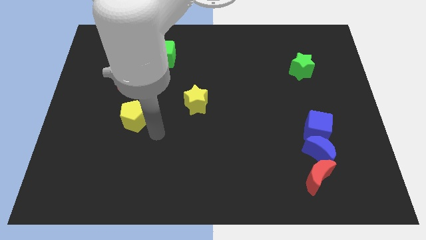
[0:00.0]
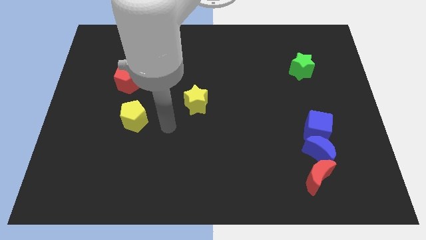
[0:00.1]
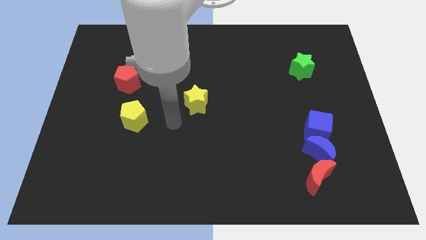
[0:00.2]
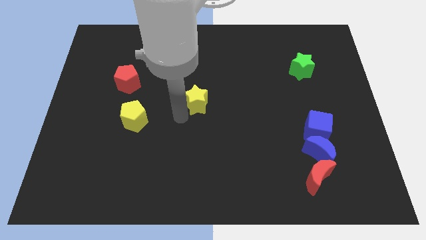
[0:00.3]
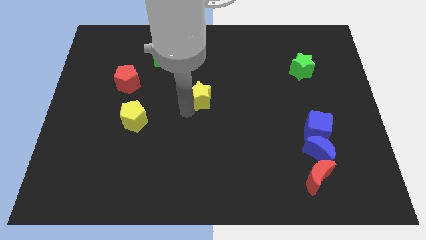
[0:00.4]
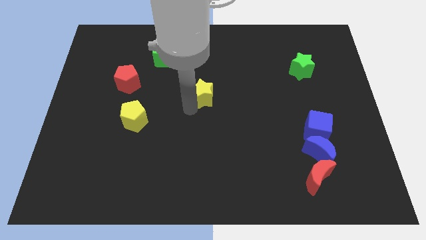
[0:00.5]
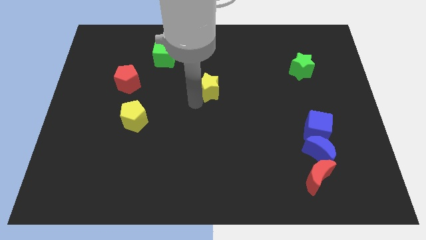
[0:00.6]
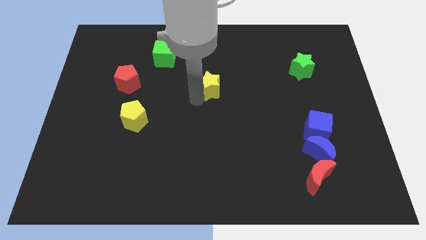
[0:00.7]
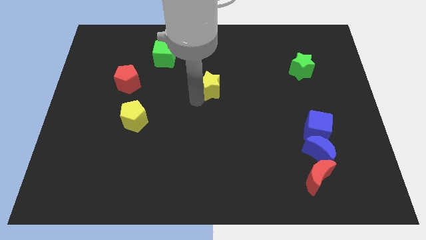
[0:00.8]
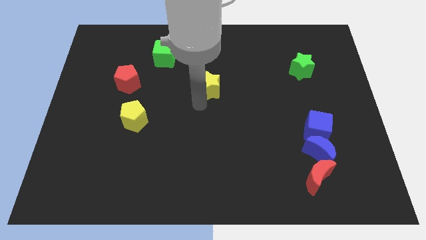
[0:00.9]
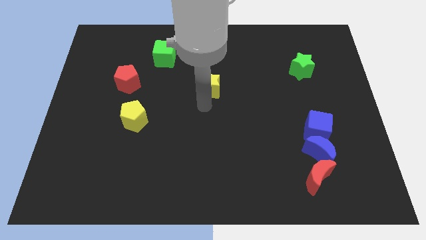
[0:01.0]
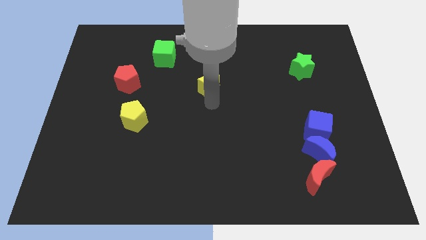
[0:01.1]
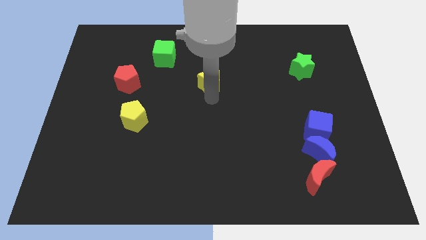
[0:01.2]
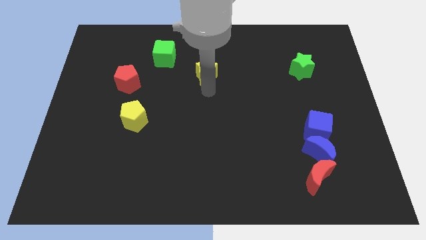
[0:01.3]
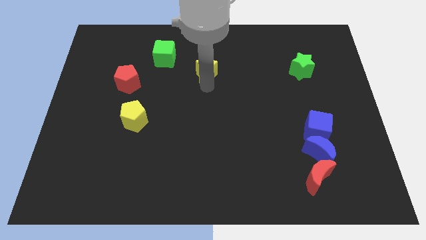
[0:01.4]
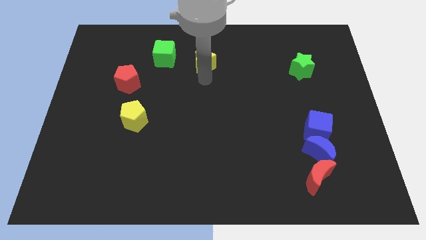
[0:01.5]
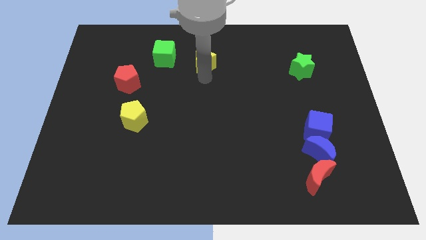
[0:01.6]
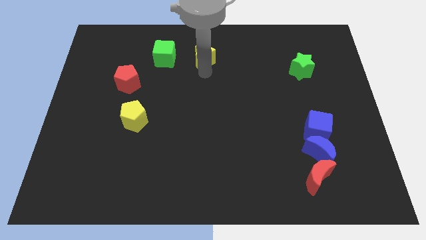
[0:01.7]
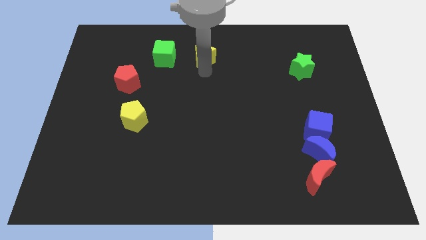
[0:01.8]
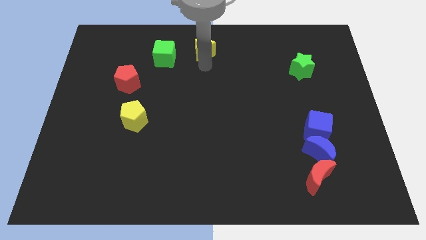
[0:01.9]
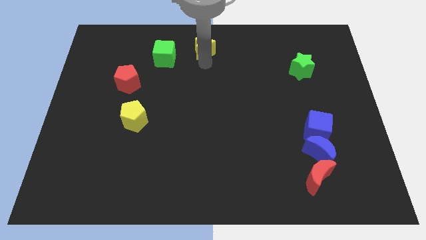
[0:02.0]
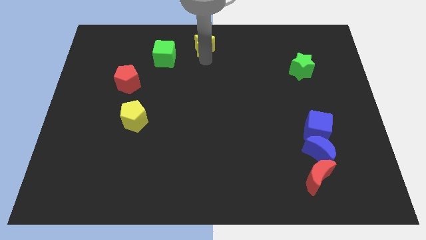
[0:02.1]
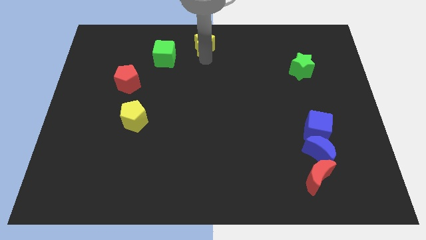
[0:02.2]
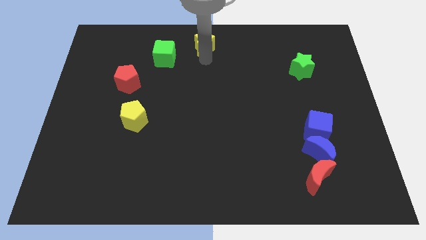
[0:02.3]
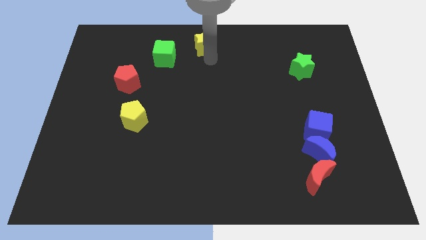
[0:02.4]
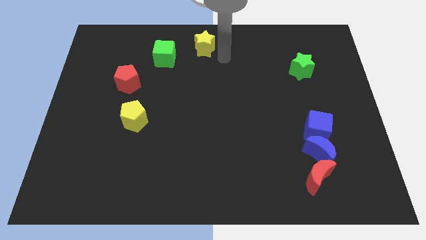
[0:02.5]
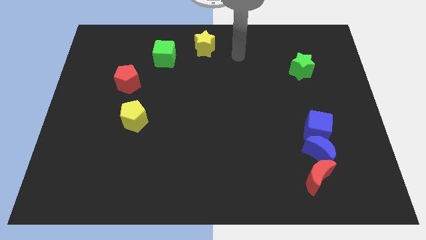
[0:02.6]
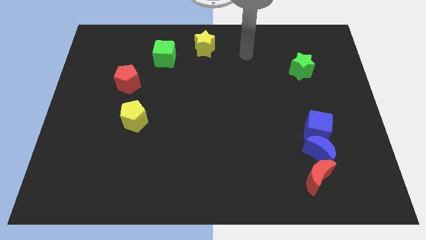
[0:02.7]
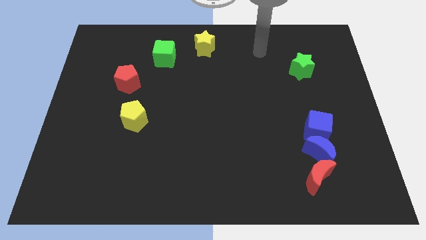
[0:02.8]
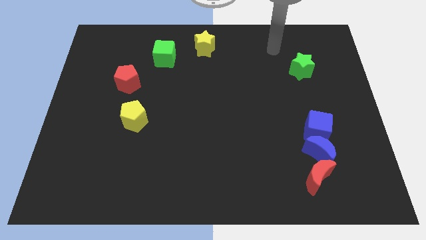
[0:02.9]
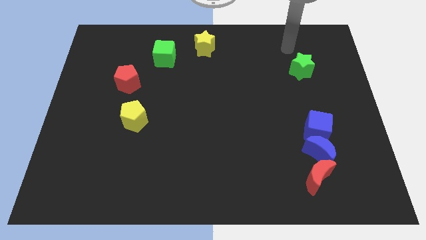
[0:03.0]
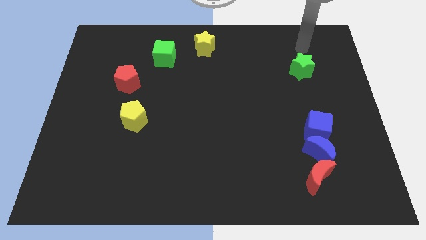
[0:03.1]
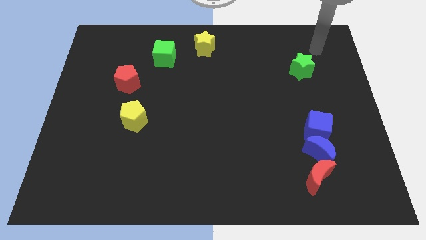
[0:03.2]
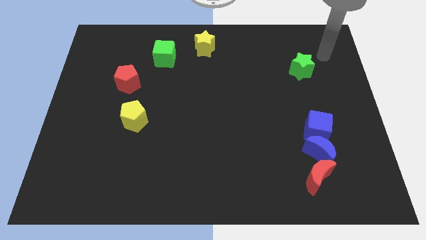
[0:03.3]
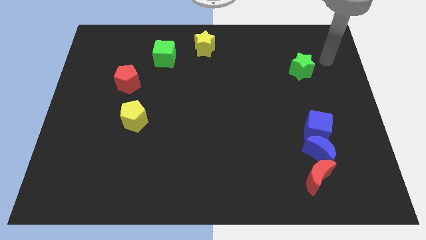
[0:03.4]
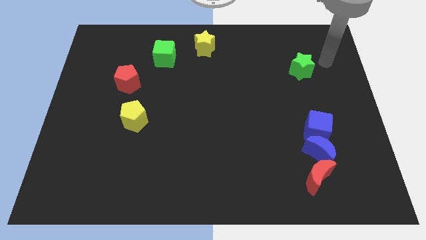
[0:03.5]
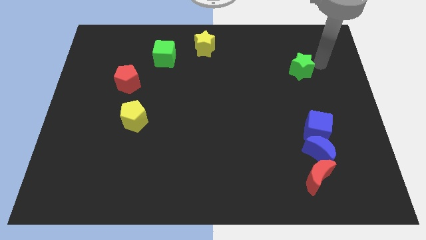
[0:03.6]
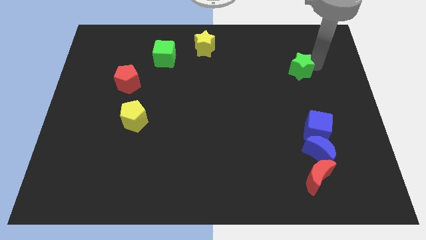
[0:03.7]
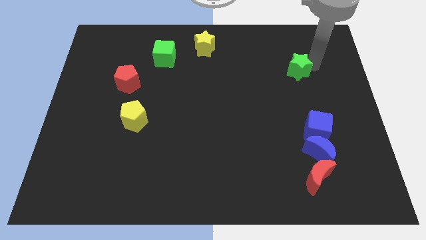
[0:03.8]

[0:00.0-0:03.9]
push the yellow star to the top

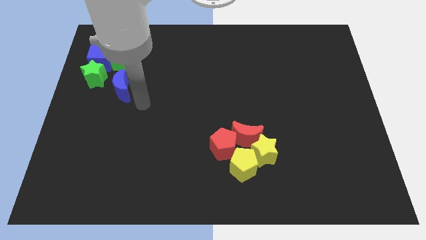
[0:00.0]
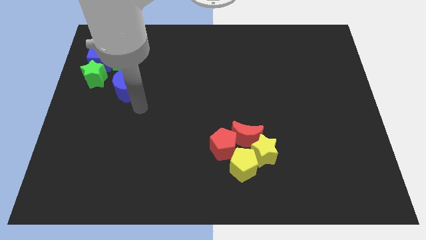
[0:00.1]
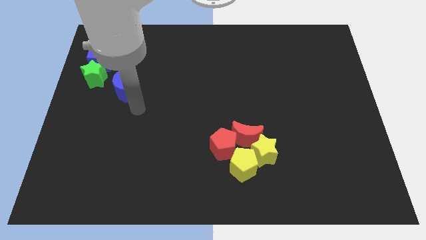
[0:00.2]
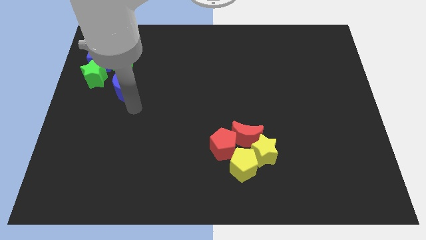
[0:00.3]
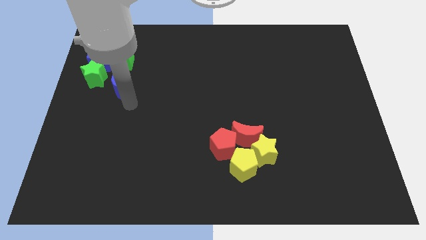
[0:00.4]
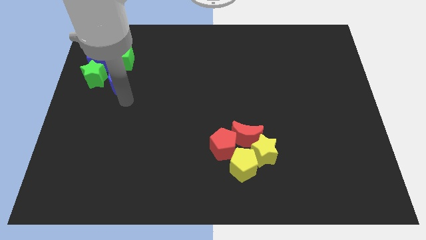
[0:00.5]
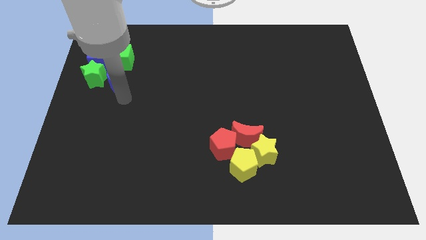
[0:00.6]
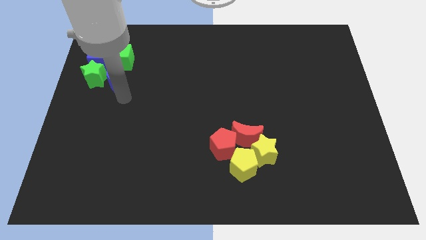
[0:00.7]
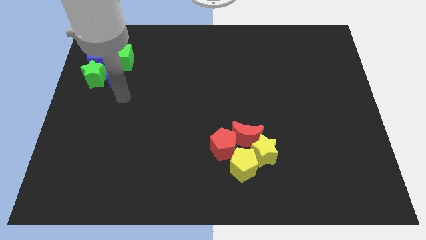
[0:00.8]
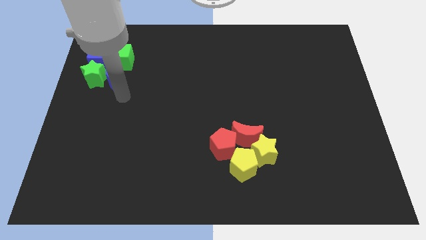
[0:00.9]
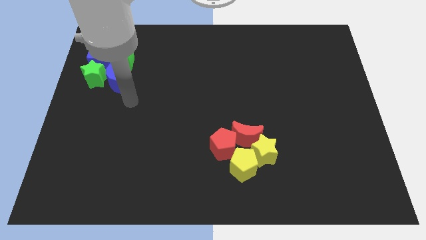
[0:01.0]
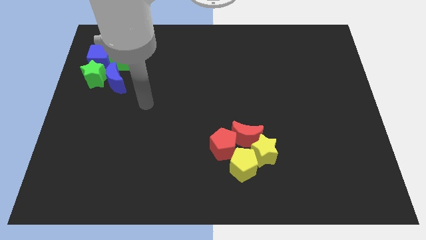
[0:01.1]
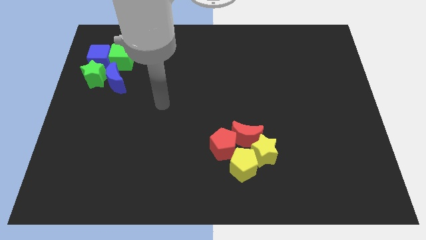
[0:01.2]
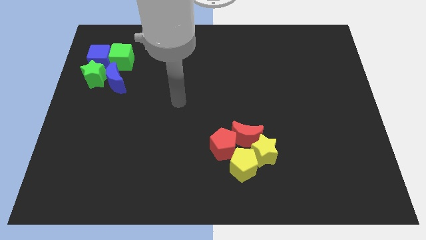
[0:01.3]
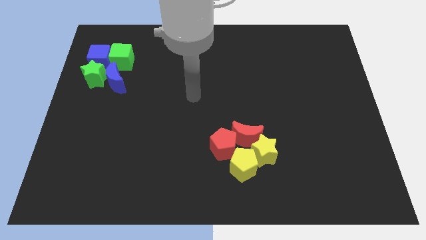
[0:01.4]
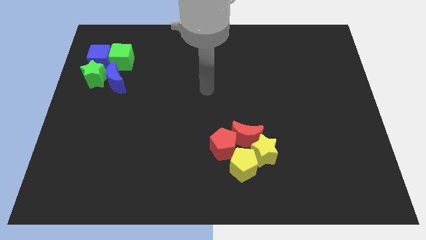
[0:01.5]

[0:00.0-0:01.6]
push the blue moon into the blue green blocks

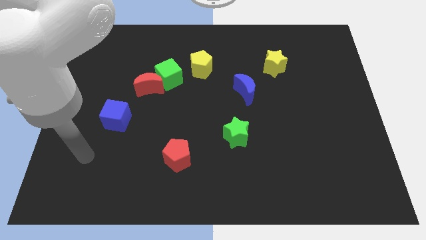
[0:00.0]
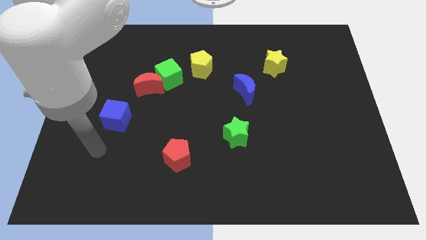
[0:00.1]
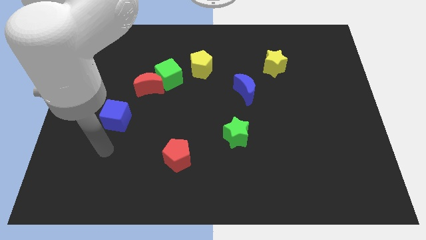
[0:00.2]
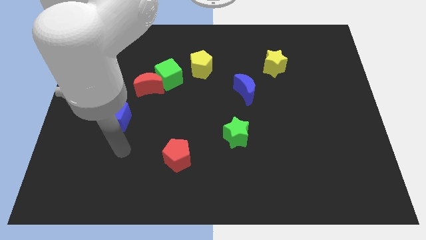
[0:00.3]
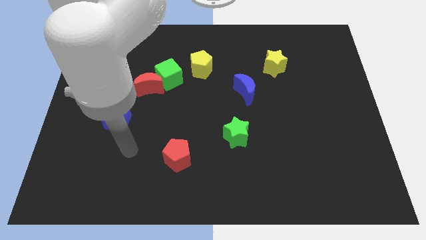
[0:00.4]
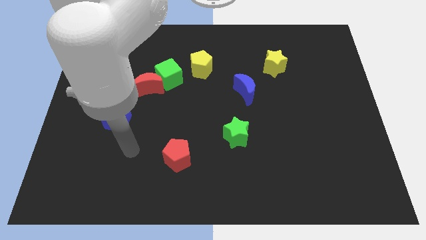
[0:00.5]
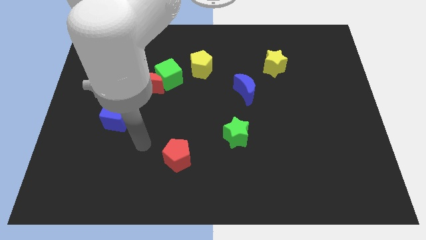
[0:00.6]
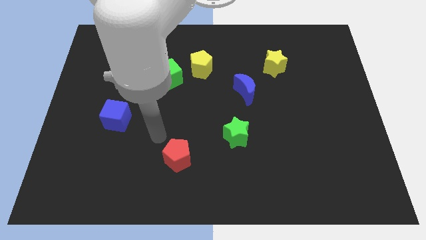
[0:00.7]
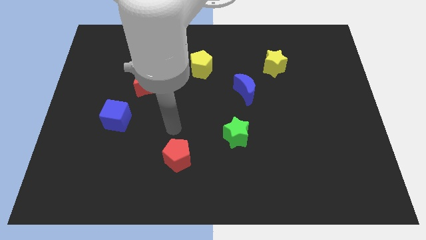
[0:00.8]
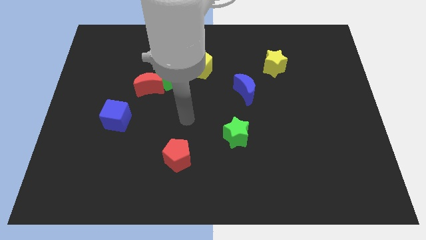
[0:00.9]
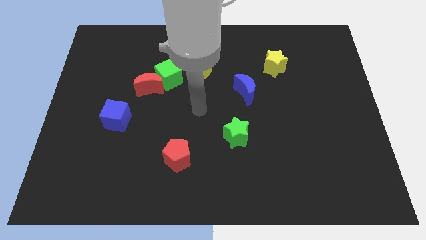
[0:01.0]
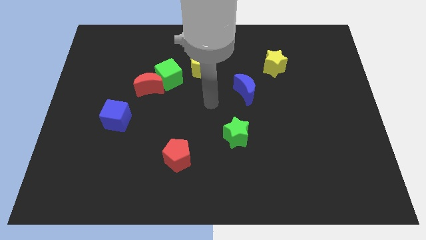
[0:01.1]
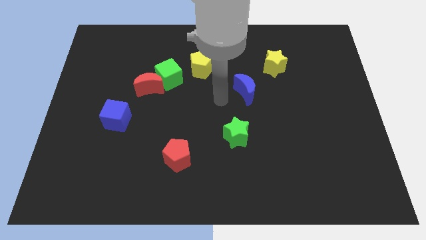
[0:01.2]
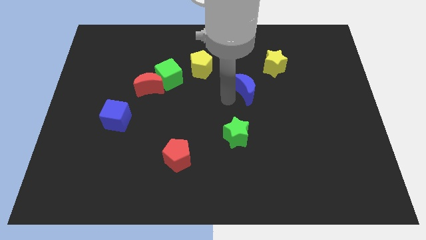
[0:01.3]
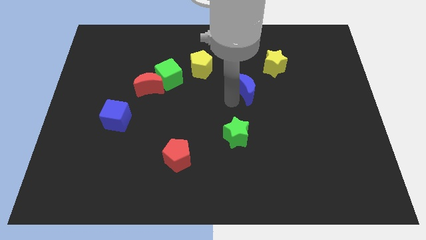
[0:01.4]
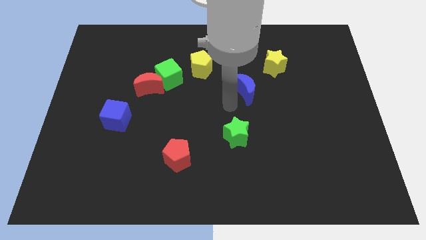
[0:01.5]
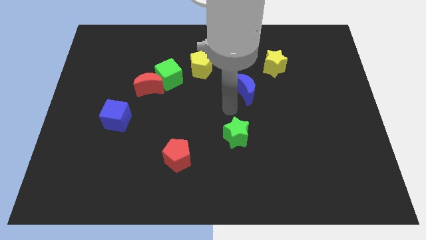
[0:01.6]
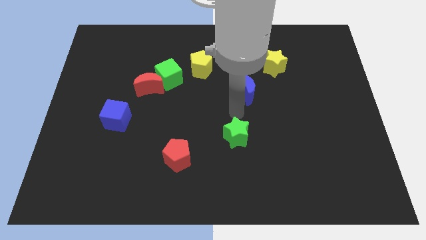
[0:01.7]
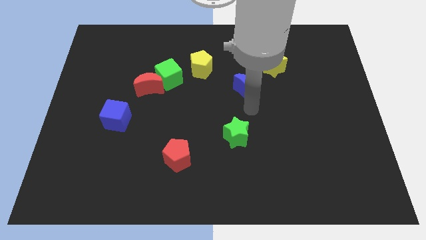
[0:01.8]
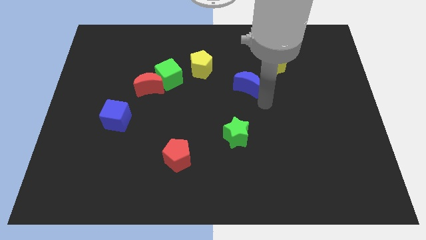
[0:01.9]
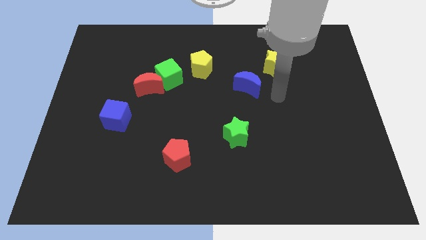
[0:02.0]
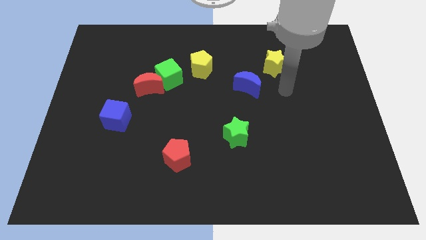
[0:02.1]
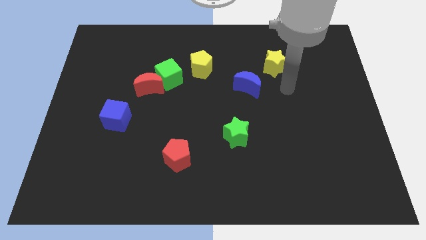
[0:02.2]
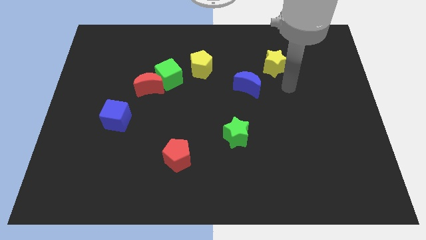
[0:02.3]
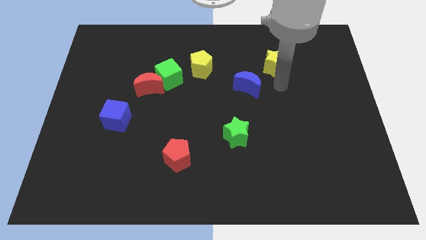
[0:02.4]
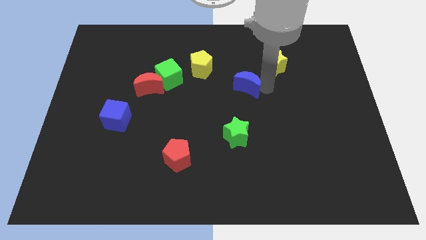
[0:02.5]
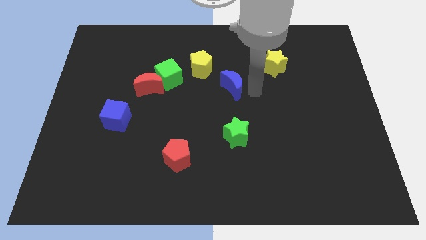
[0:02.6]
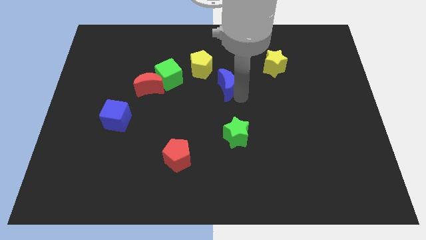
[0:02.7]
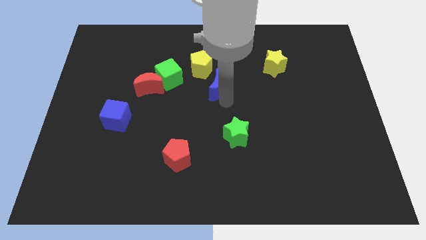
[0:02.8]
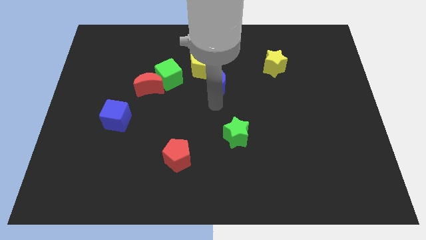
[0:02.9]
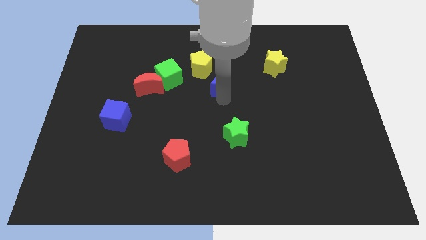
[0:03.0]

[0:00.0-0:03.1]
slightly turn the blue moon diagonal below yellow pentagon

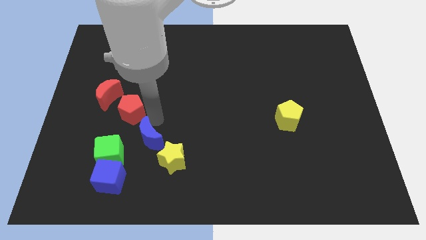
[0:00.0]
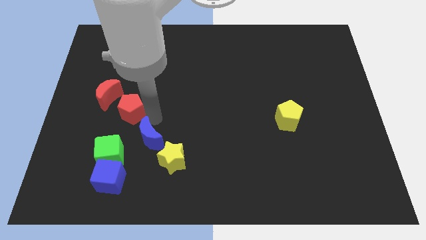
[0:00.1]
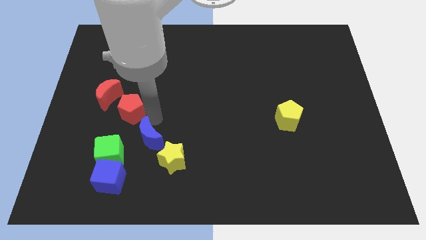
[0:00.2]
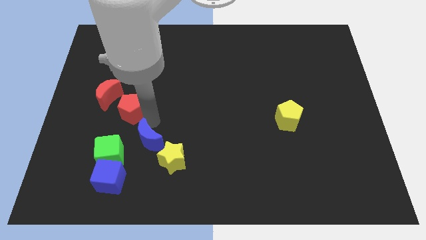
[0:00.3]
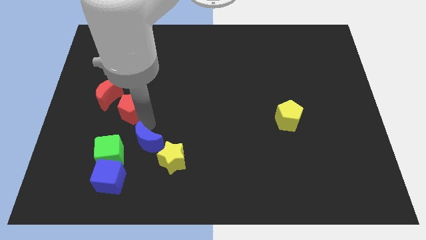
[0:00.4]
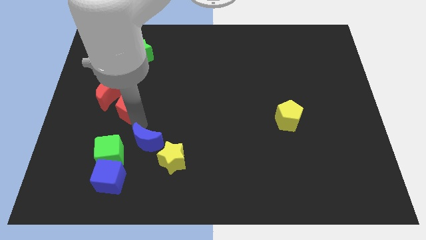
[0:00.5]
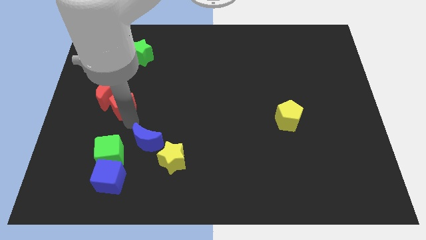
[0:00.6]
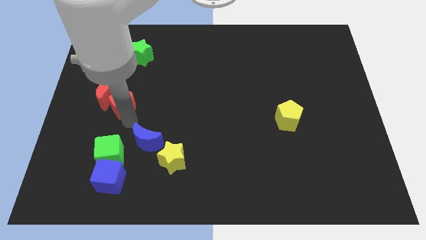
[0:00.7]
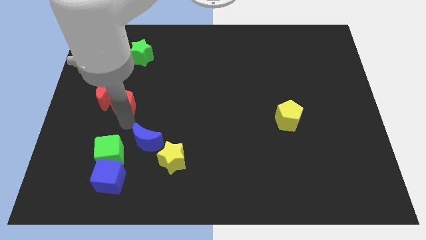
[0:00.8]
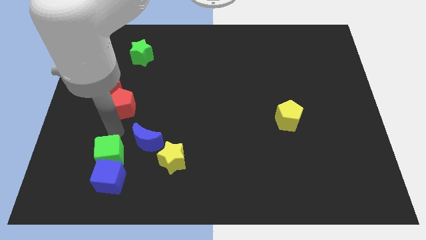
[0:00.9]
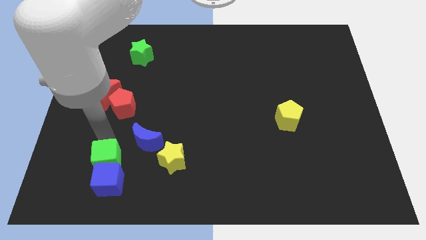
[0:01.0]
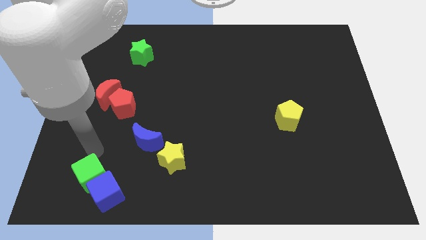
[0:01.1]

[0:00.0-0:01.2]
attach the red pentagon to the red moon
